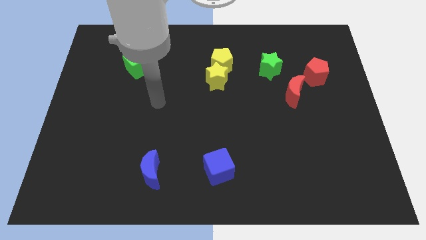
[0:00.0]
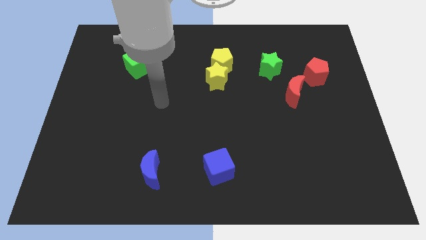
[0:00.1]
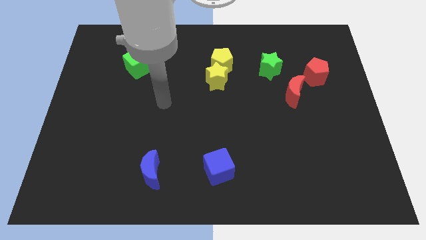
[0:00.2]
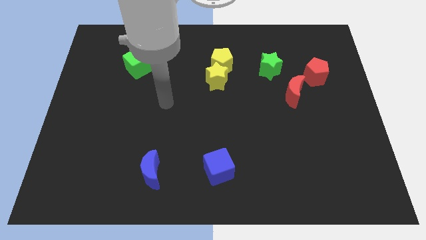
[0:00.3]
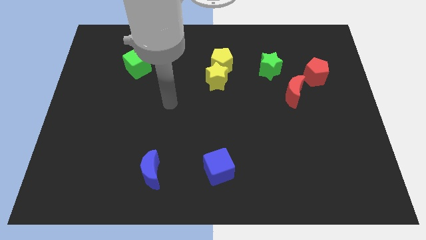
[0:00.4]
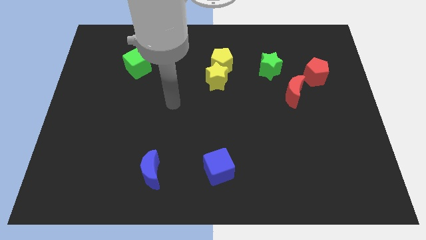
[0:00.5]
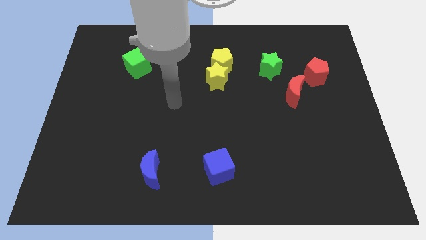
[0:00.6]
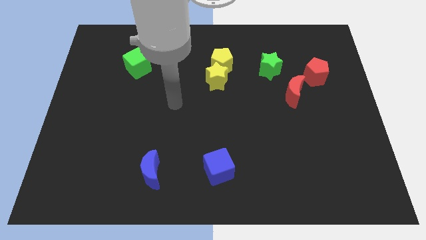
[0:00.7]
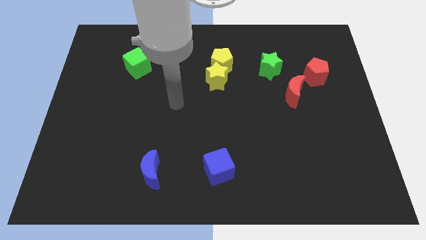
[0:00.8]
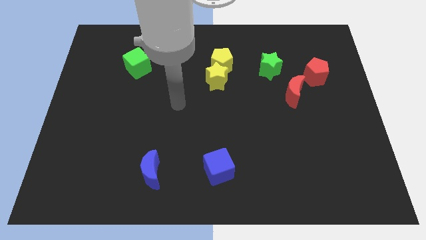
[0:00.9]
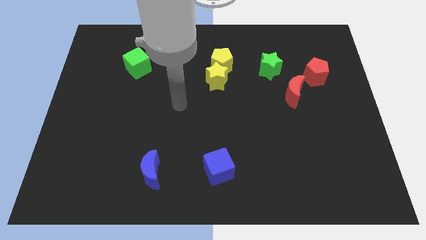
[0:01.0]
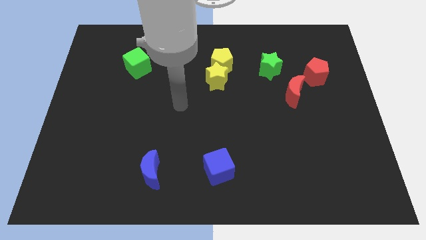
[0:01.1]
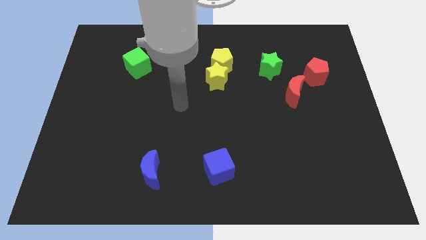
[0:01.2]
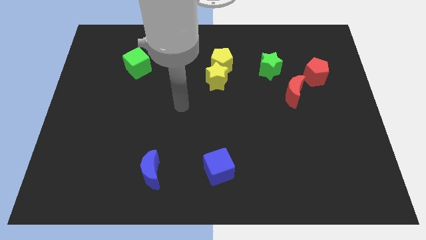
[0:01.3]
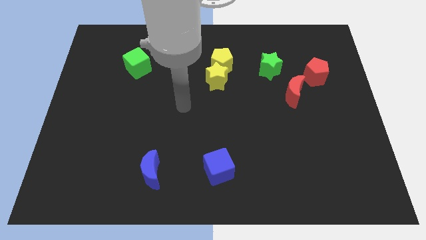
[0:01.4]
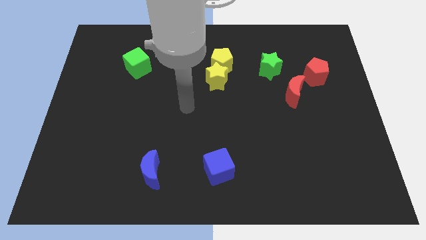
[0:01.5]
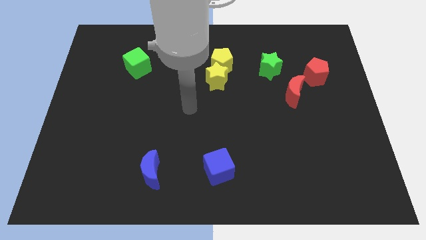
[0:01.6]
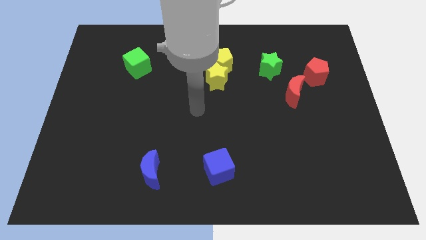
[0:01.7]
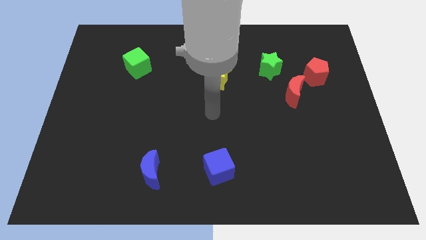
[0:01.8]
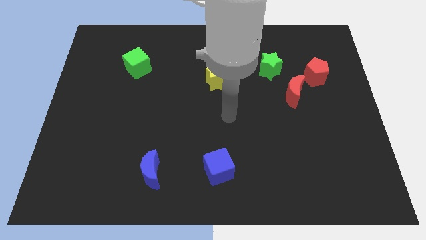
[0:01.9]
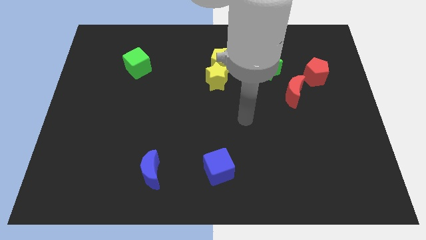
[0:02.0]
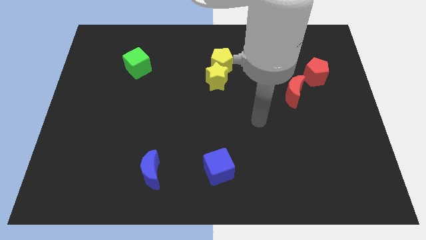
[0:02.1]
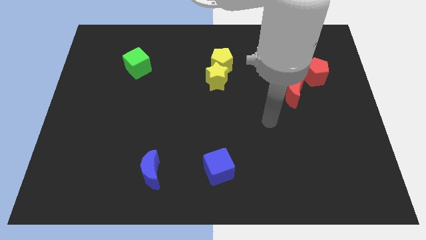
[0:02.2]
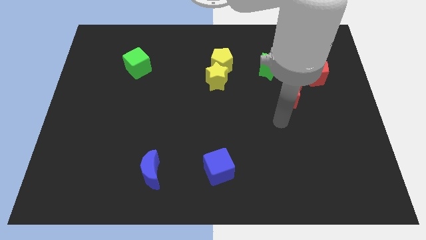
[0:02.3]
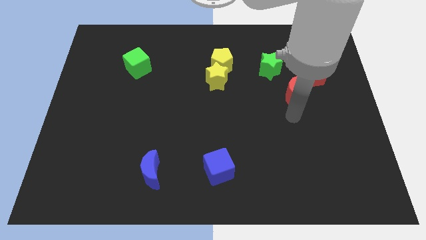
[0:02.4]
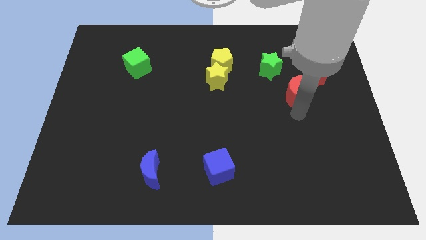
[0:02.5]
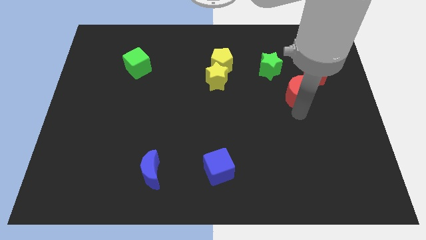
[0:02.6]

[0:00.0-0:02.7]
move the arm to the center right

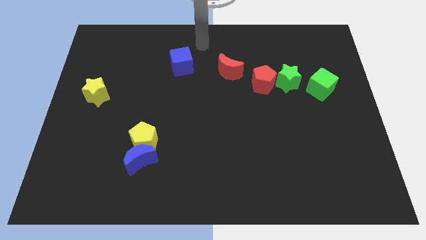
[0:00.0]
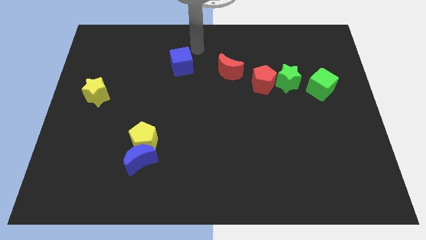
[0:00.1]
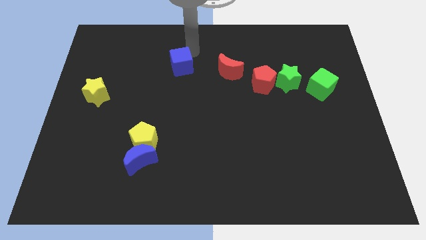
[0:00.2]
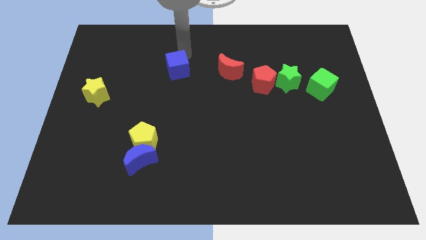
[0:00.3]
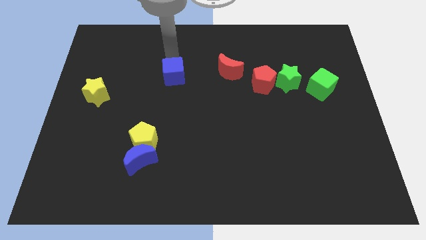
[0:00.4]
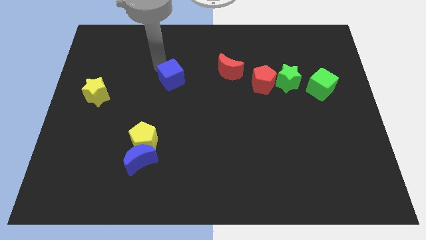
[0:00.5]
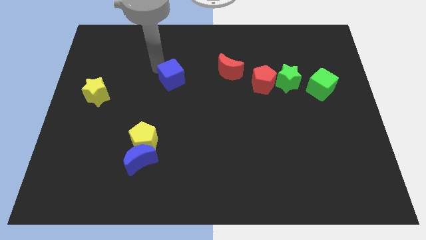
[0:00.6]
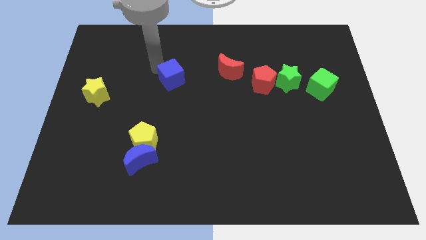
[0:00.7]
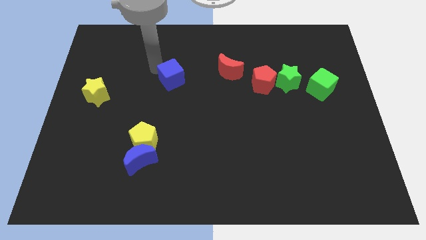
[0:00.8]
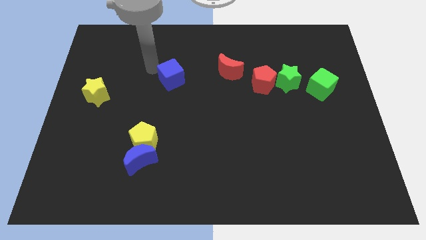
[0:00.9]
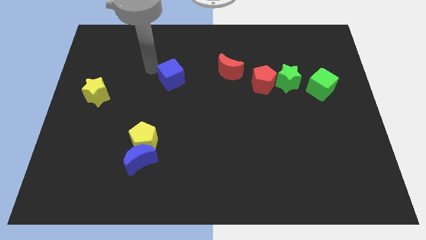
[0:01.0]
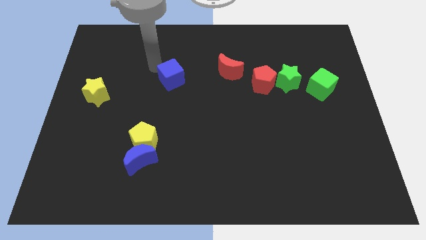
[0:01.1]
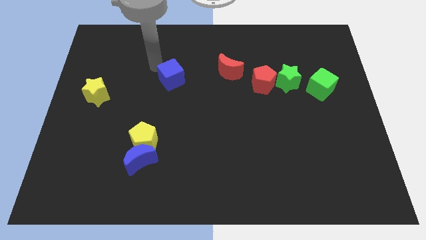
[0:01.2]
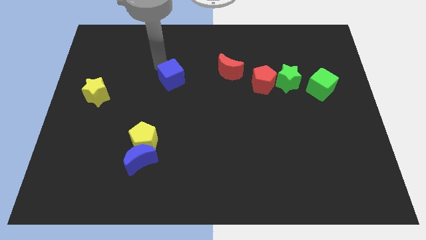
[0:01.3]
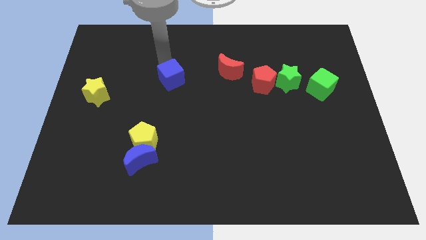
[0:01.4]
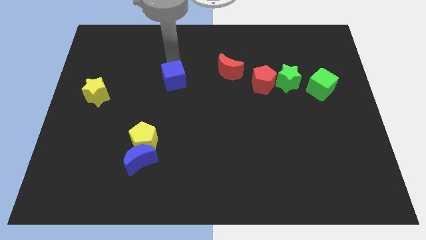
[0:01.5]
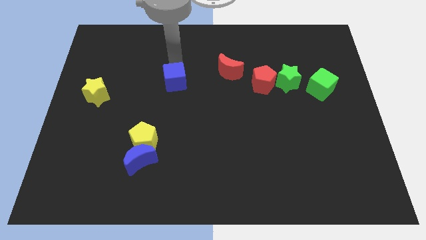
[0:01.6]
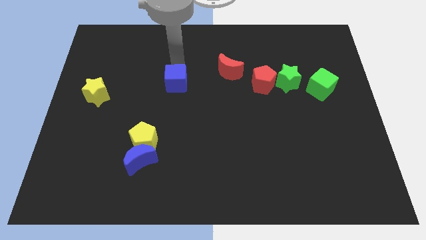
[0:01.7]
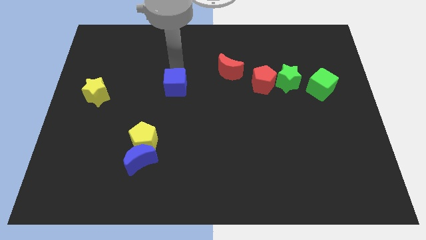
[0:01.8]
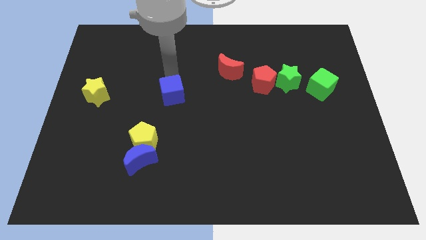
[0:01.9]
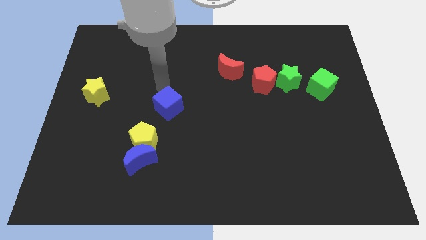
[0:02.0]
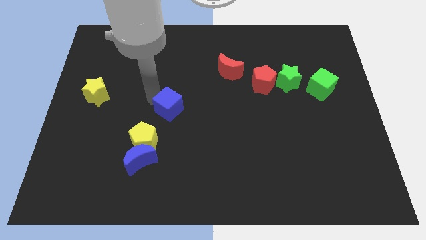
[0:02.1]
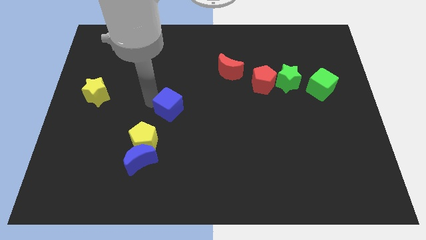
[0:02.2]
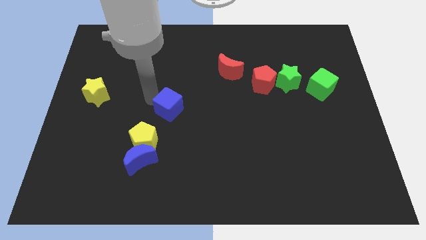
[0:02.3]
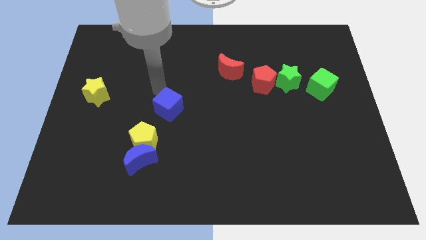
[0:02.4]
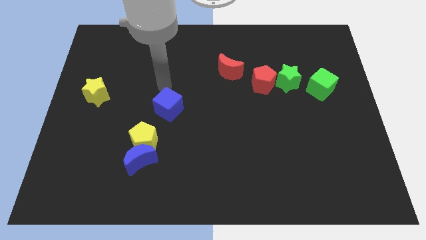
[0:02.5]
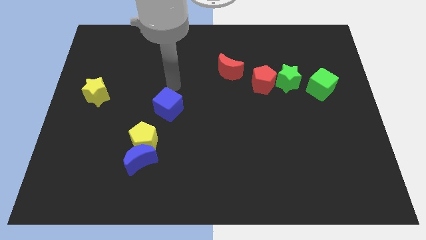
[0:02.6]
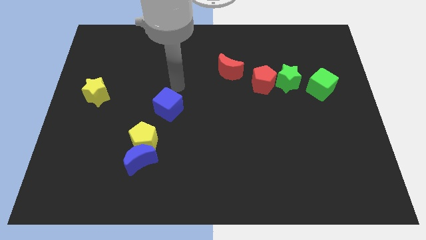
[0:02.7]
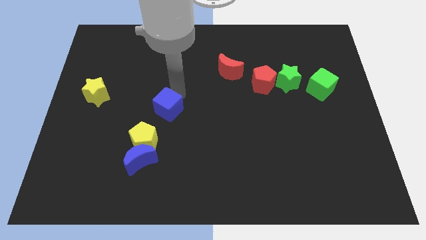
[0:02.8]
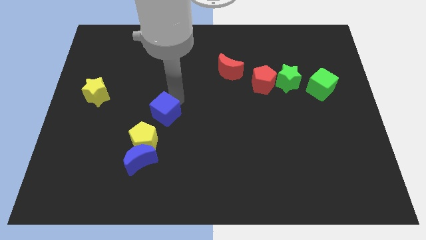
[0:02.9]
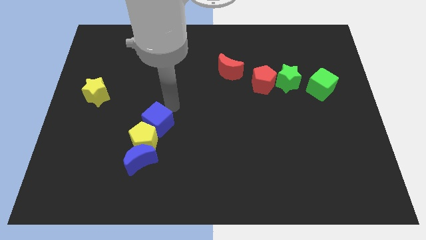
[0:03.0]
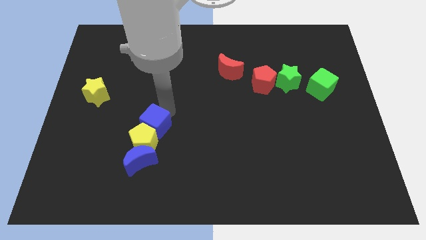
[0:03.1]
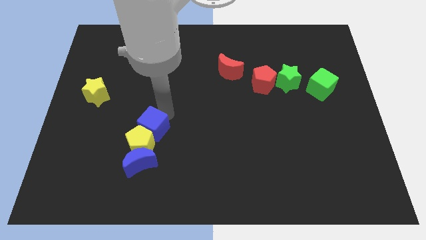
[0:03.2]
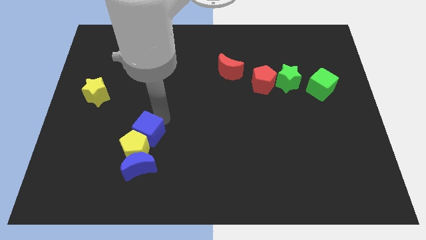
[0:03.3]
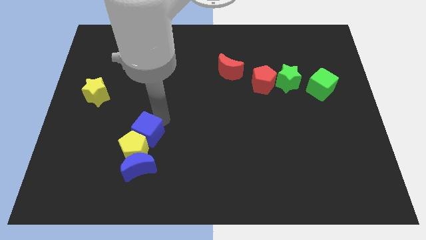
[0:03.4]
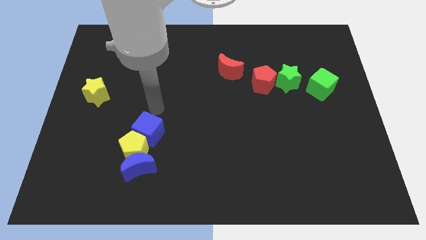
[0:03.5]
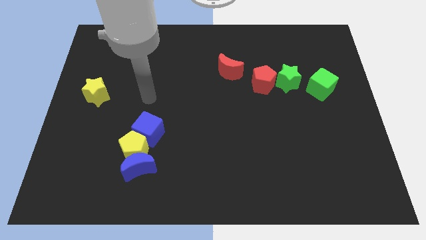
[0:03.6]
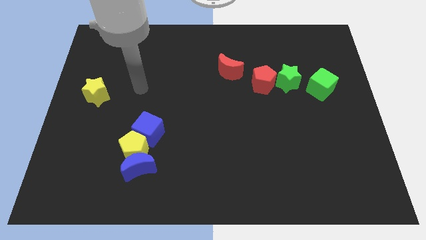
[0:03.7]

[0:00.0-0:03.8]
move the blue cube into the top side of the yellow pentagon

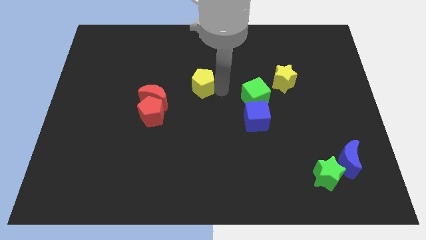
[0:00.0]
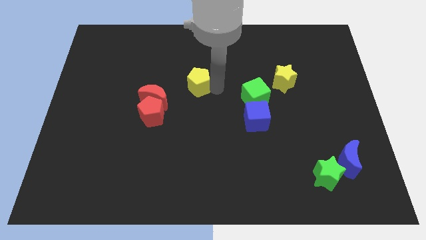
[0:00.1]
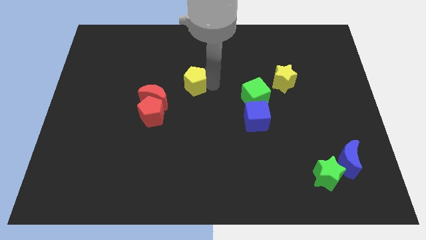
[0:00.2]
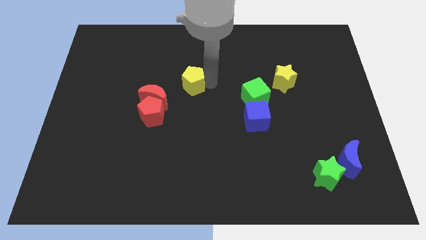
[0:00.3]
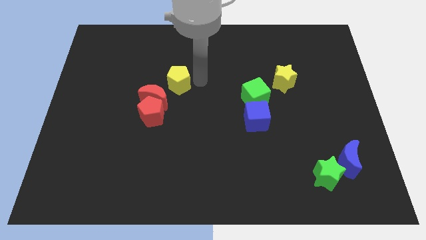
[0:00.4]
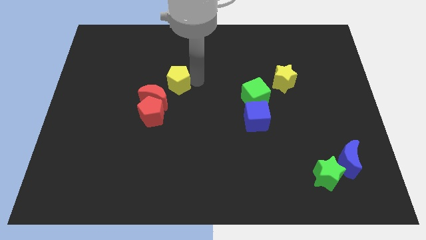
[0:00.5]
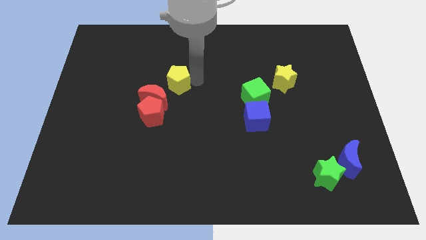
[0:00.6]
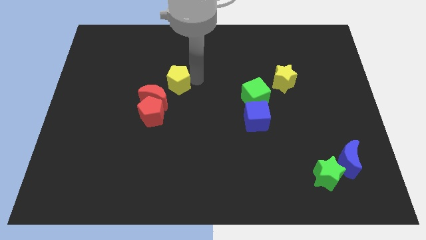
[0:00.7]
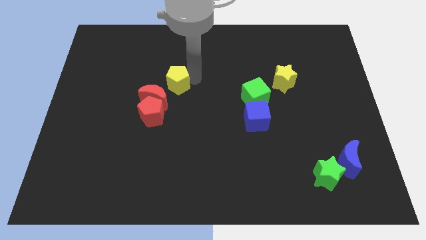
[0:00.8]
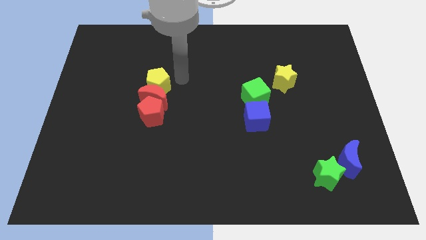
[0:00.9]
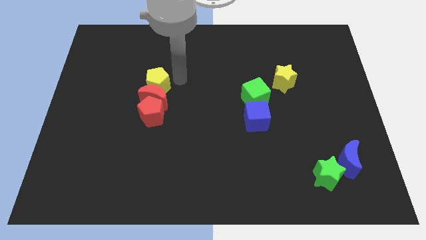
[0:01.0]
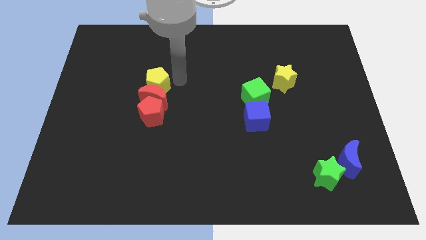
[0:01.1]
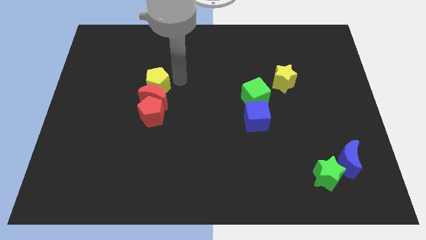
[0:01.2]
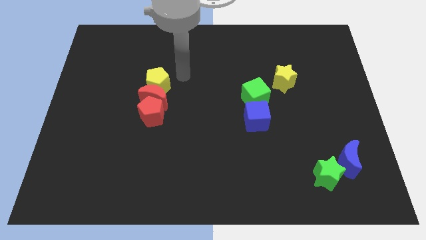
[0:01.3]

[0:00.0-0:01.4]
push the yellow pentagon to the top of the red crescent

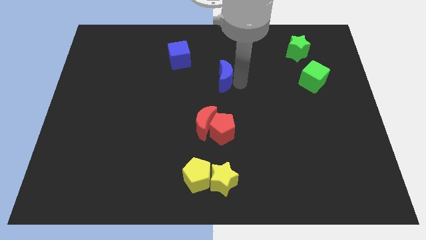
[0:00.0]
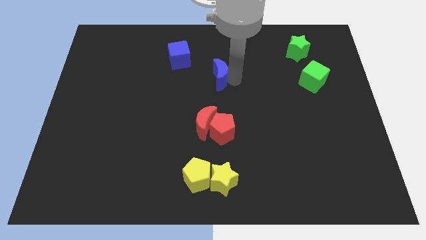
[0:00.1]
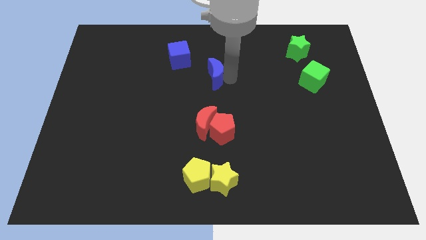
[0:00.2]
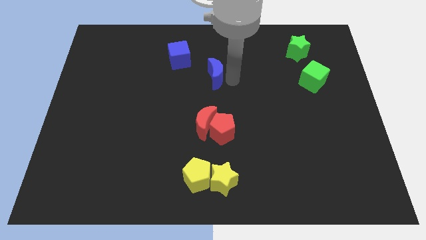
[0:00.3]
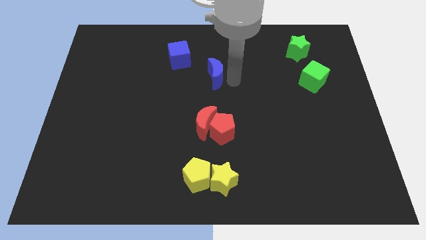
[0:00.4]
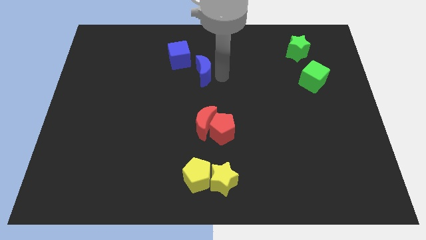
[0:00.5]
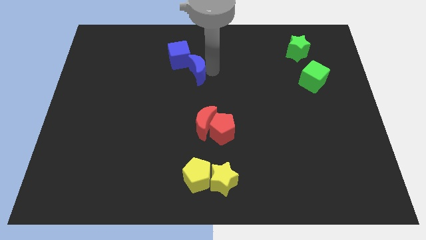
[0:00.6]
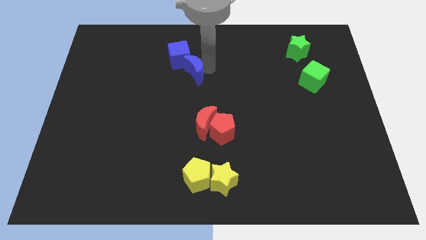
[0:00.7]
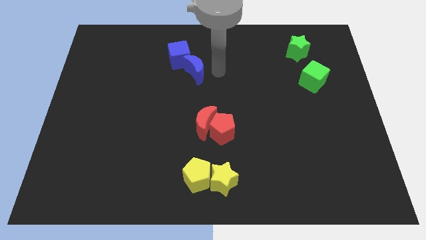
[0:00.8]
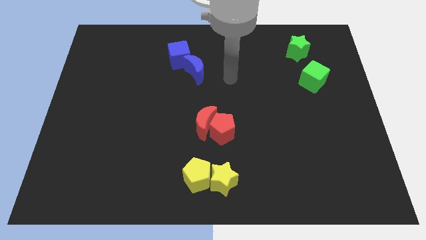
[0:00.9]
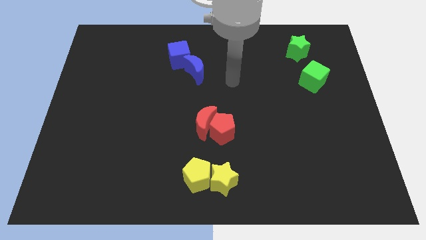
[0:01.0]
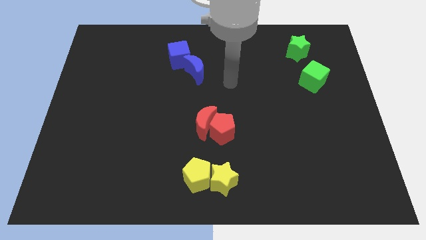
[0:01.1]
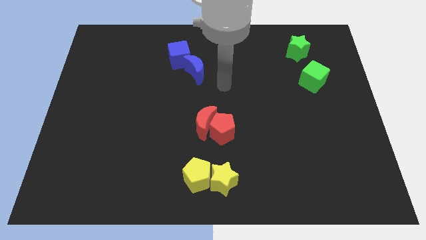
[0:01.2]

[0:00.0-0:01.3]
move the blue crescent towards the blue cube
